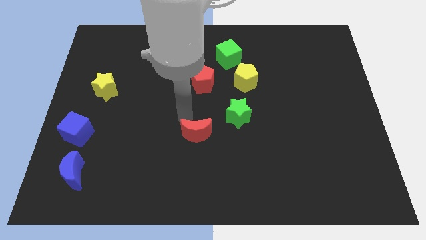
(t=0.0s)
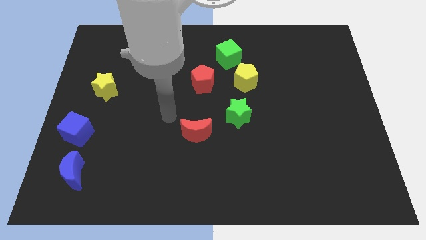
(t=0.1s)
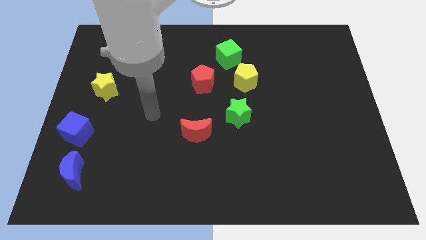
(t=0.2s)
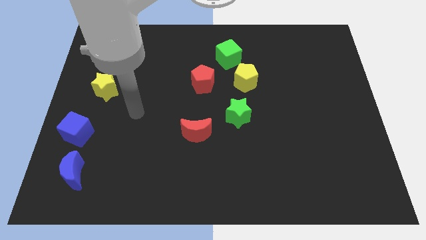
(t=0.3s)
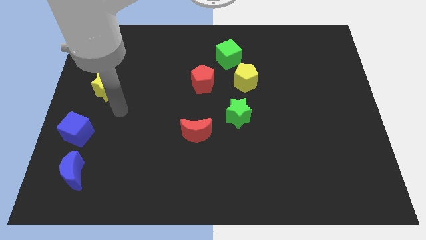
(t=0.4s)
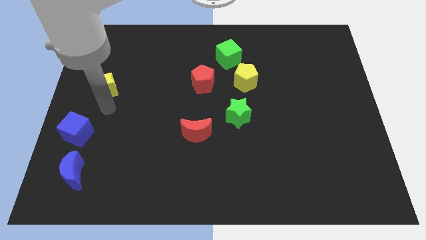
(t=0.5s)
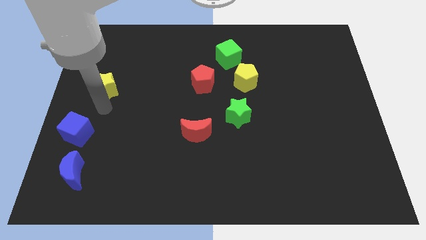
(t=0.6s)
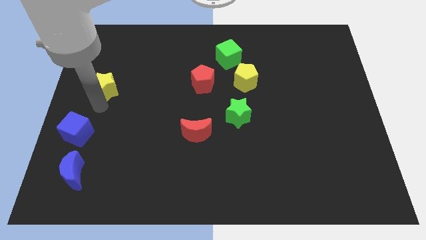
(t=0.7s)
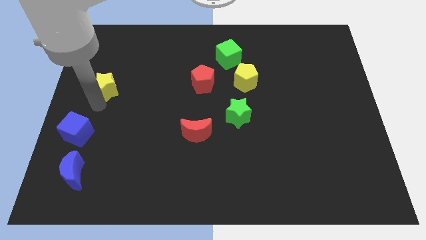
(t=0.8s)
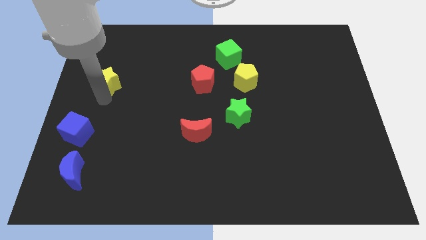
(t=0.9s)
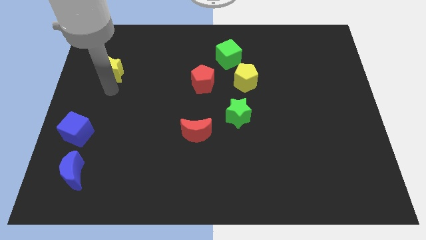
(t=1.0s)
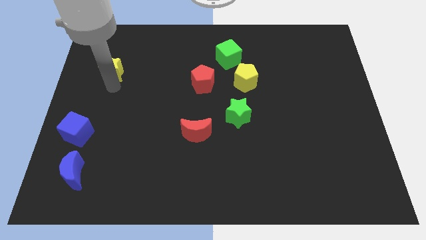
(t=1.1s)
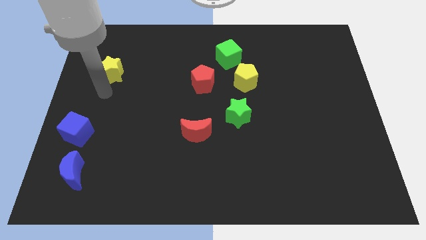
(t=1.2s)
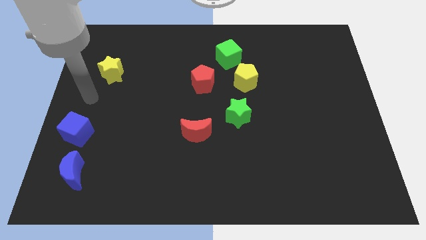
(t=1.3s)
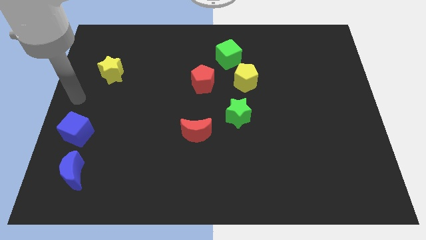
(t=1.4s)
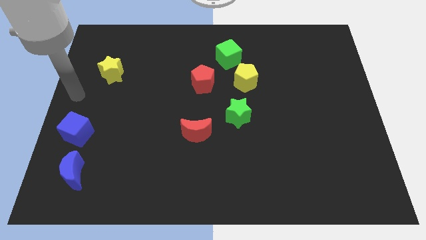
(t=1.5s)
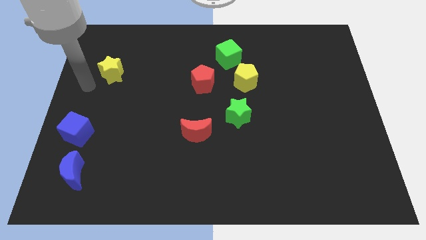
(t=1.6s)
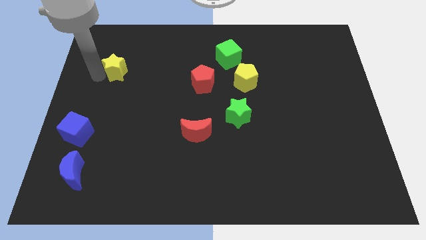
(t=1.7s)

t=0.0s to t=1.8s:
move the yellow star slightly towards the top left of the board

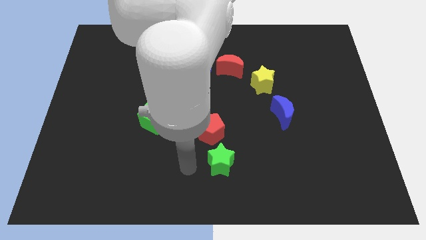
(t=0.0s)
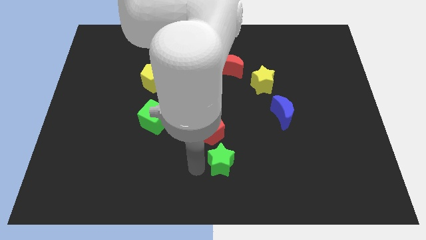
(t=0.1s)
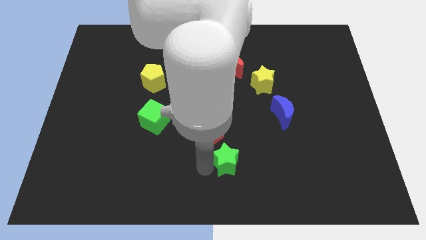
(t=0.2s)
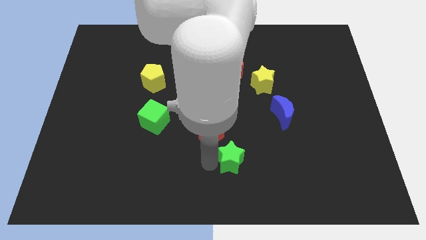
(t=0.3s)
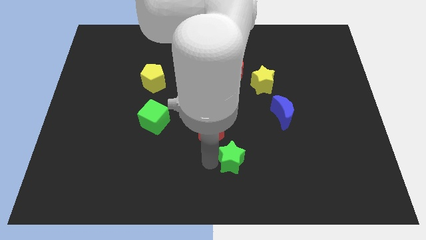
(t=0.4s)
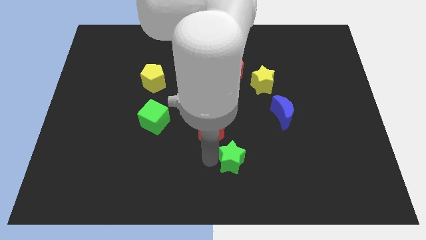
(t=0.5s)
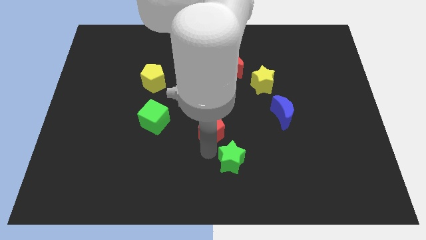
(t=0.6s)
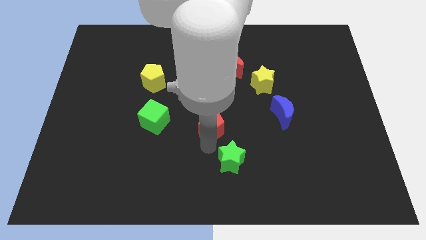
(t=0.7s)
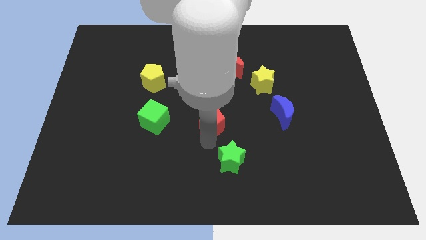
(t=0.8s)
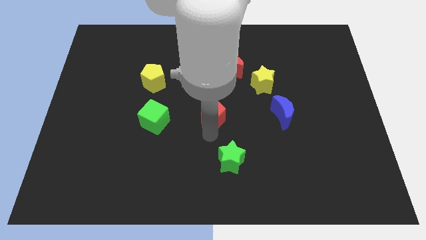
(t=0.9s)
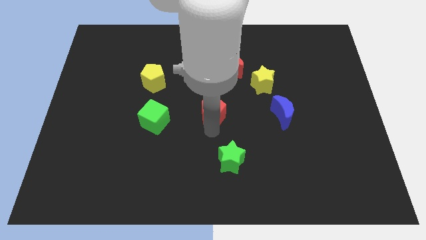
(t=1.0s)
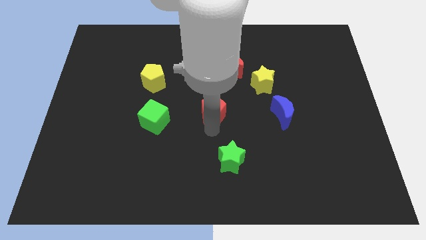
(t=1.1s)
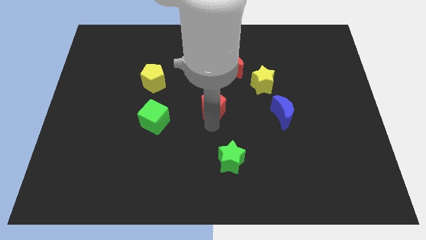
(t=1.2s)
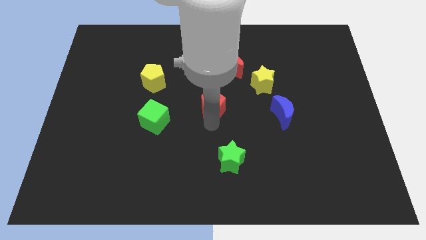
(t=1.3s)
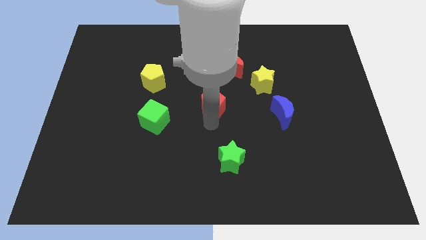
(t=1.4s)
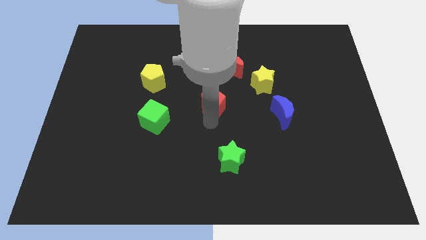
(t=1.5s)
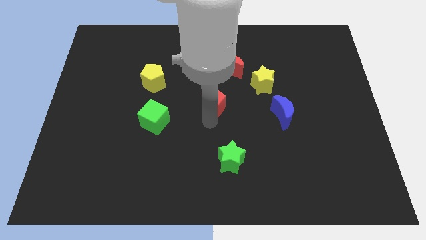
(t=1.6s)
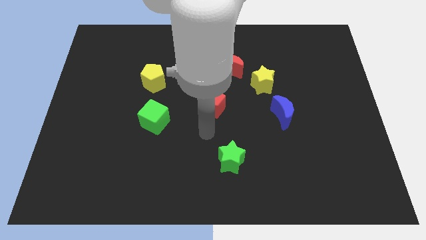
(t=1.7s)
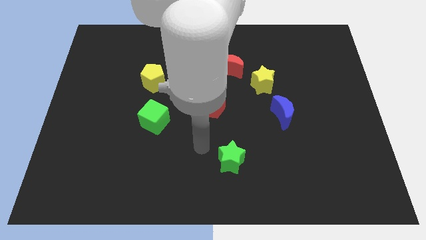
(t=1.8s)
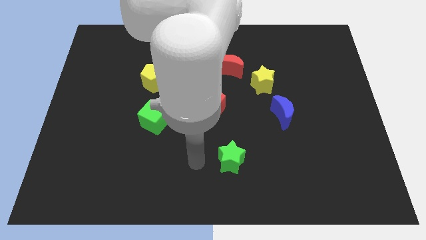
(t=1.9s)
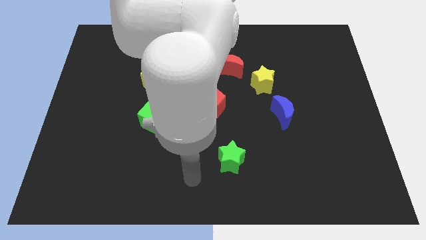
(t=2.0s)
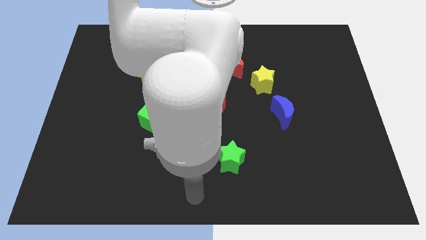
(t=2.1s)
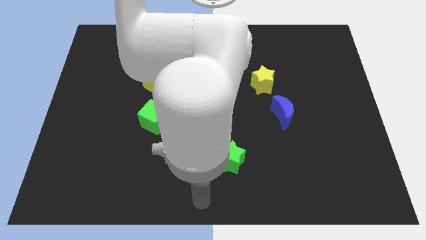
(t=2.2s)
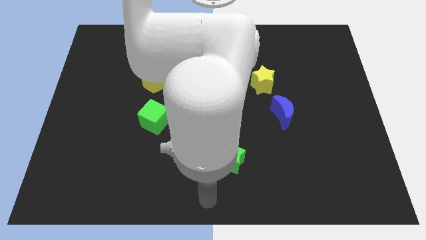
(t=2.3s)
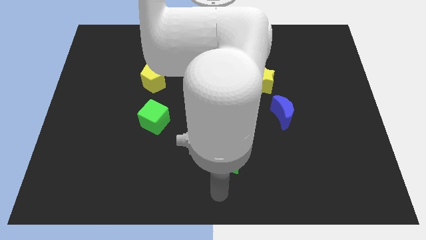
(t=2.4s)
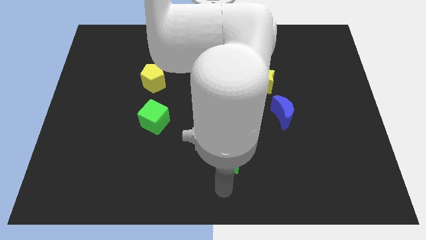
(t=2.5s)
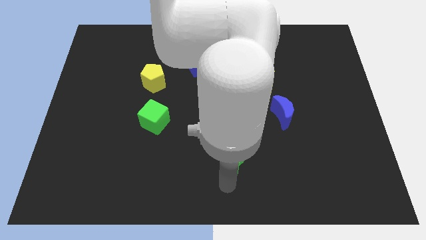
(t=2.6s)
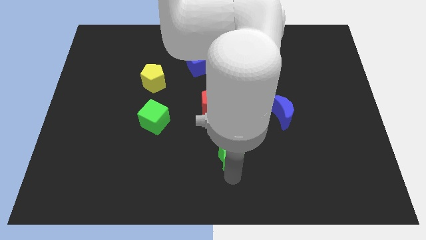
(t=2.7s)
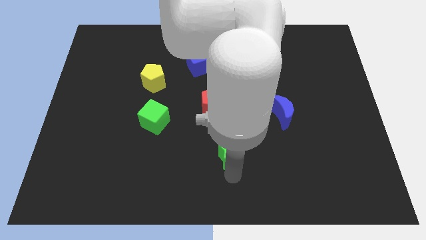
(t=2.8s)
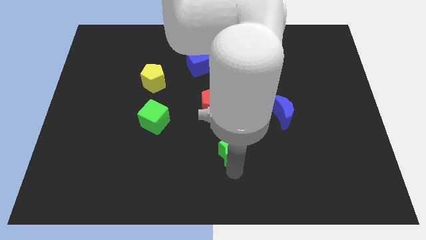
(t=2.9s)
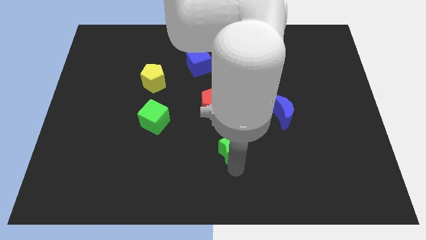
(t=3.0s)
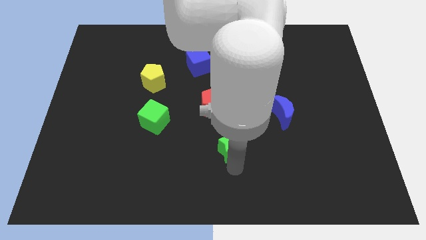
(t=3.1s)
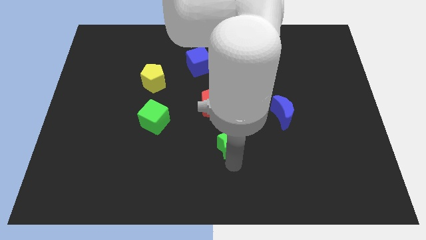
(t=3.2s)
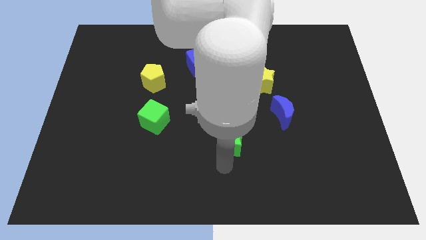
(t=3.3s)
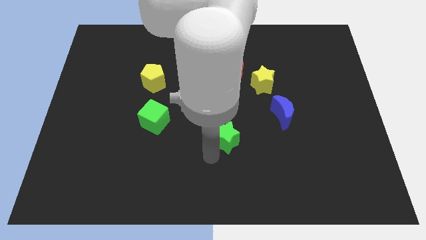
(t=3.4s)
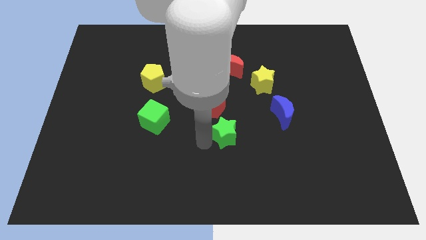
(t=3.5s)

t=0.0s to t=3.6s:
move green star and the red pentagon towards the center

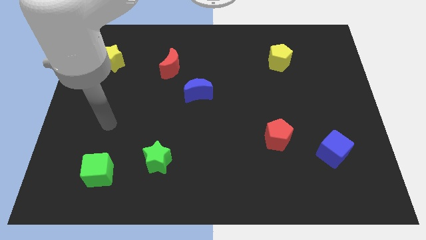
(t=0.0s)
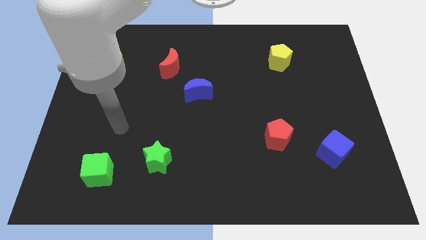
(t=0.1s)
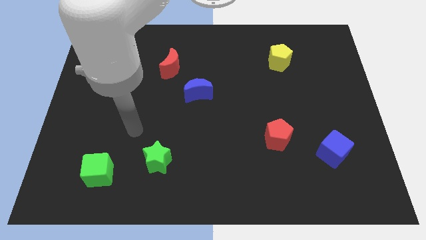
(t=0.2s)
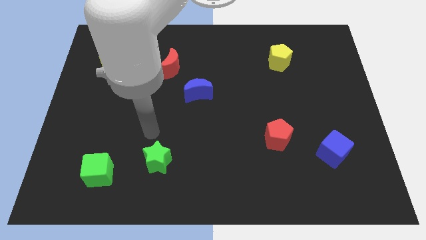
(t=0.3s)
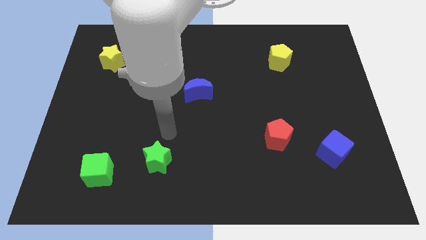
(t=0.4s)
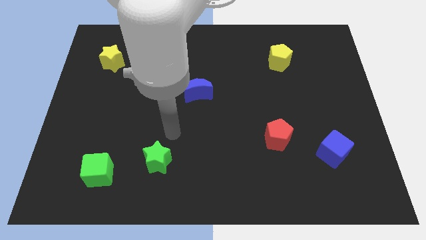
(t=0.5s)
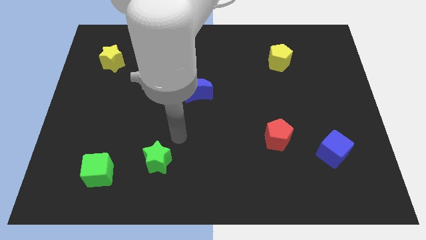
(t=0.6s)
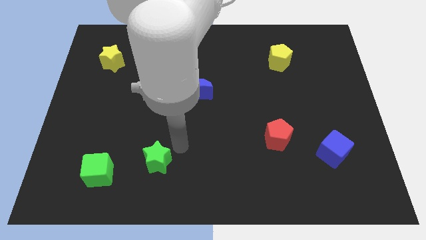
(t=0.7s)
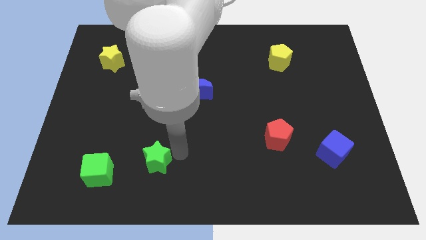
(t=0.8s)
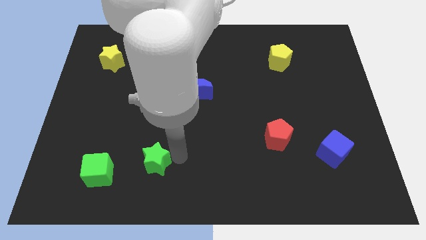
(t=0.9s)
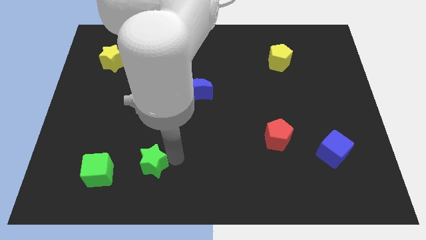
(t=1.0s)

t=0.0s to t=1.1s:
touch the green star

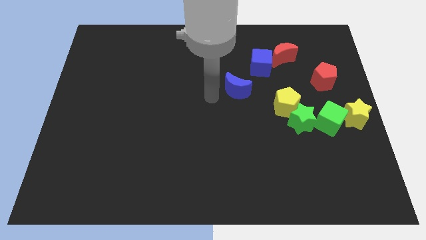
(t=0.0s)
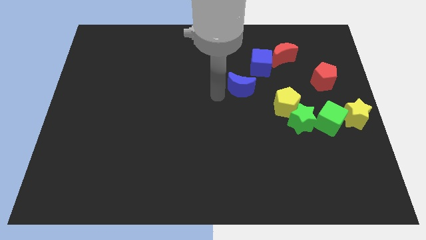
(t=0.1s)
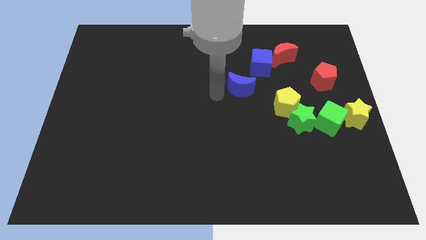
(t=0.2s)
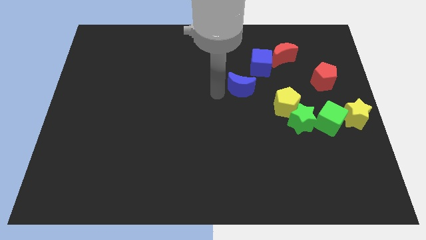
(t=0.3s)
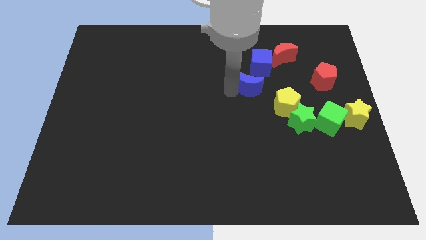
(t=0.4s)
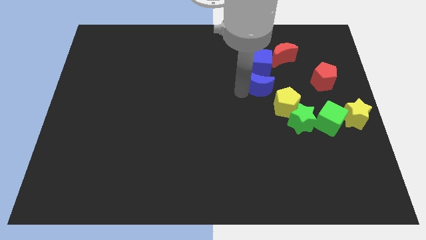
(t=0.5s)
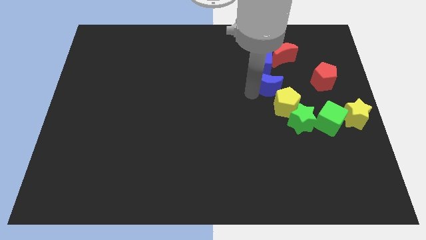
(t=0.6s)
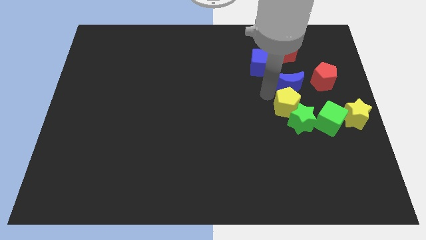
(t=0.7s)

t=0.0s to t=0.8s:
place the blue crescent above the yellow pentagon

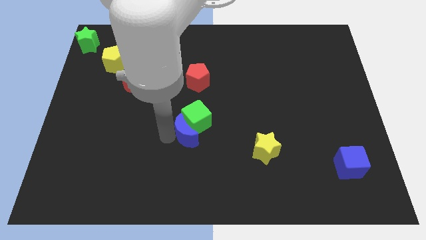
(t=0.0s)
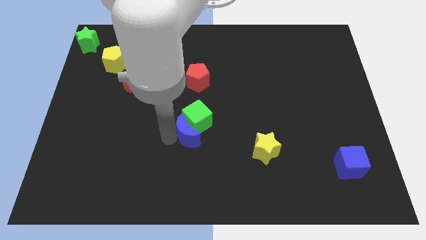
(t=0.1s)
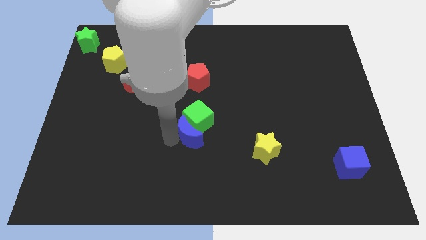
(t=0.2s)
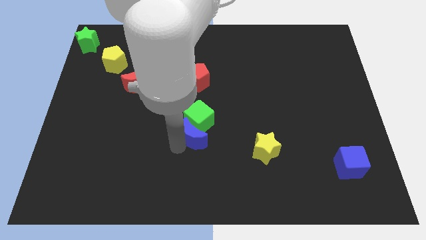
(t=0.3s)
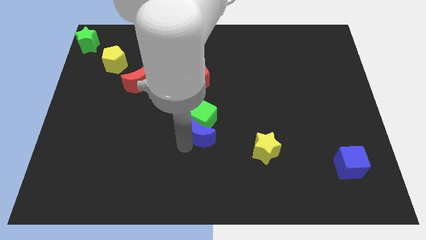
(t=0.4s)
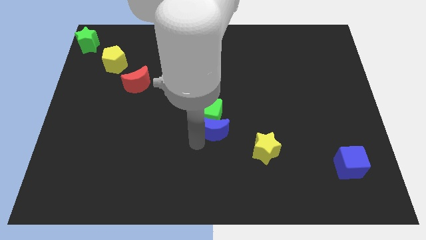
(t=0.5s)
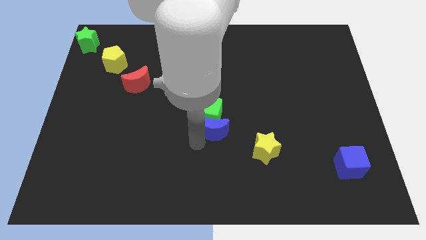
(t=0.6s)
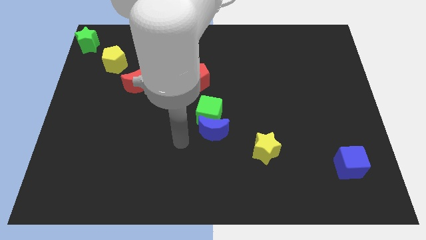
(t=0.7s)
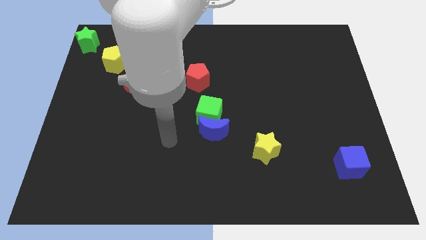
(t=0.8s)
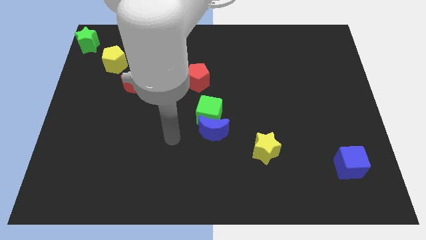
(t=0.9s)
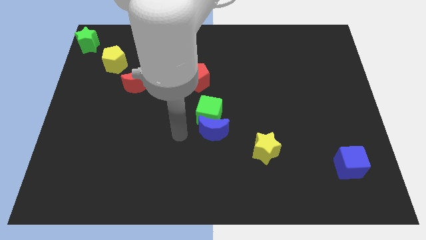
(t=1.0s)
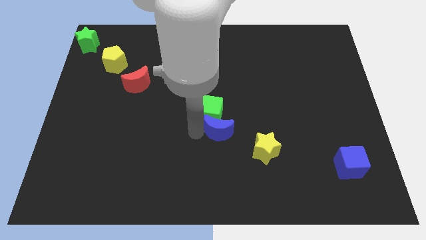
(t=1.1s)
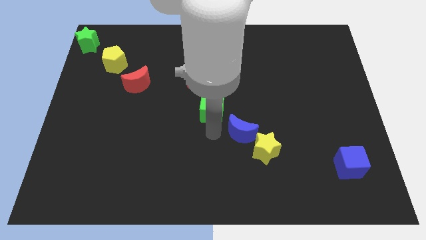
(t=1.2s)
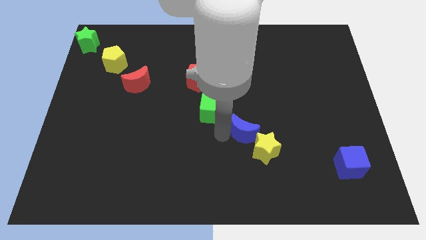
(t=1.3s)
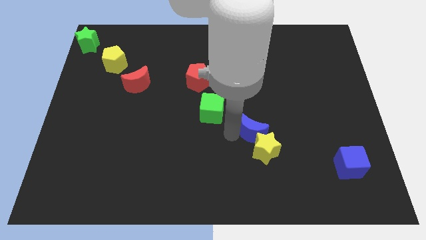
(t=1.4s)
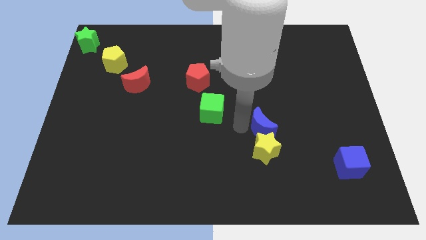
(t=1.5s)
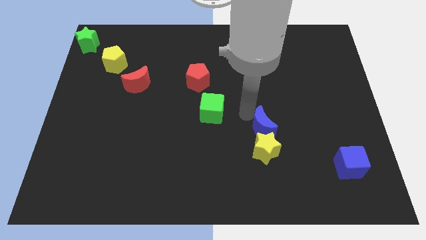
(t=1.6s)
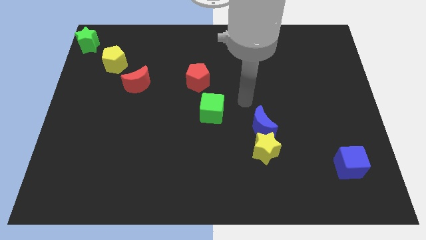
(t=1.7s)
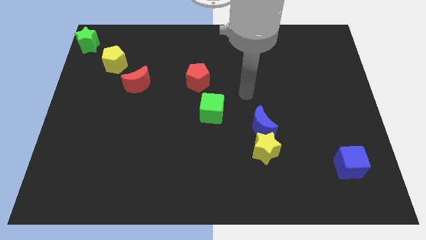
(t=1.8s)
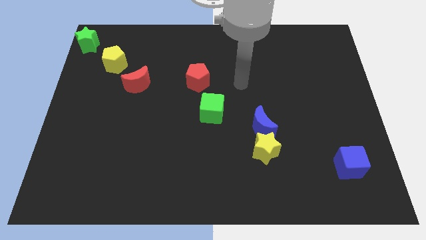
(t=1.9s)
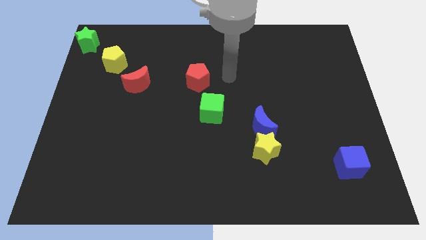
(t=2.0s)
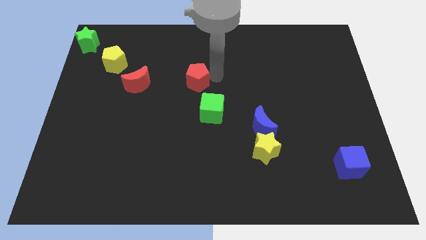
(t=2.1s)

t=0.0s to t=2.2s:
place blue crescent on top of yellow star
